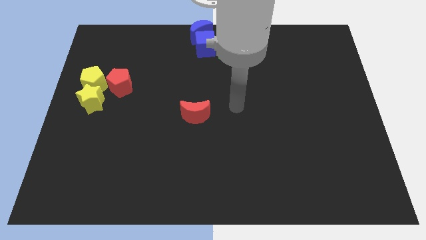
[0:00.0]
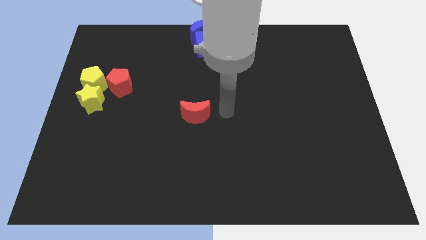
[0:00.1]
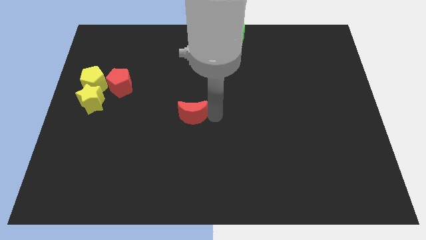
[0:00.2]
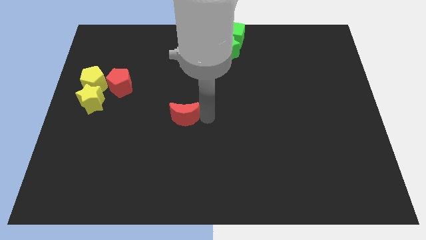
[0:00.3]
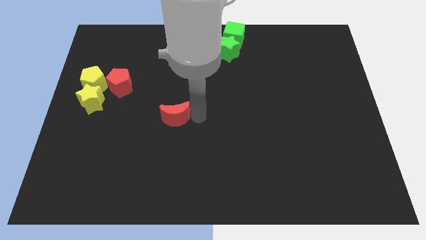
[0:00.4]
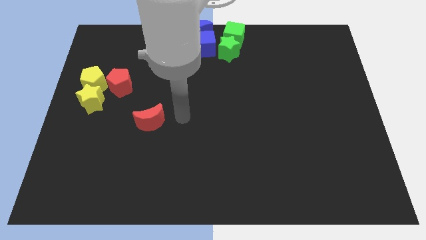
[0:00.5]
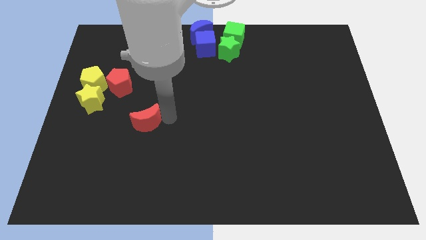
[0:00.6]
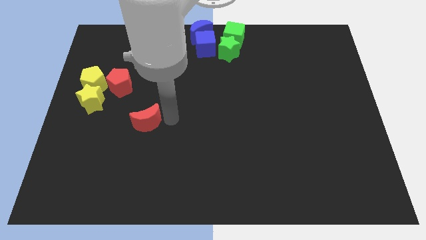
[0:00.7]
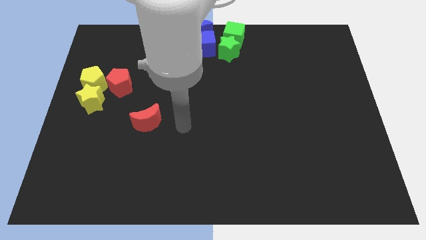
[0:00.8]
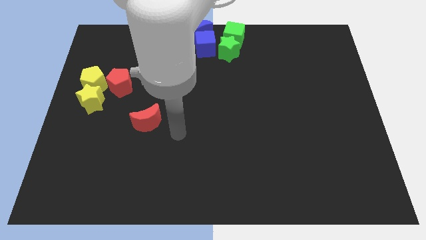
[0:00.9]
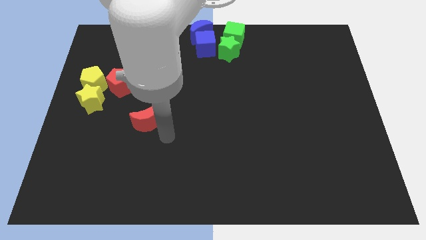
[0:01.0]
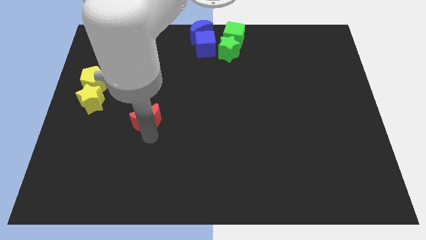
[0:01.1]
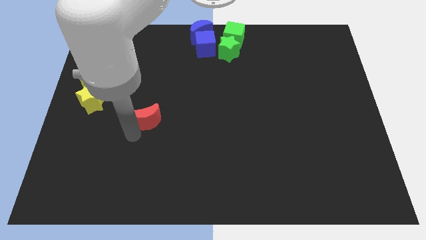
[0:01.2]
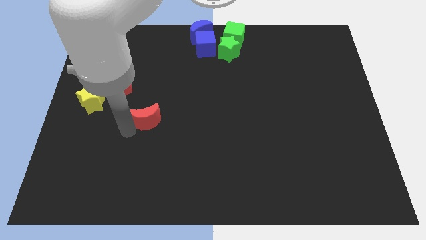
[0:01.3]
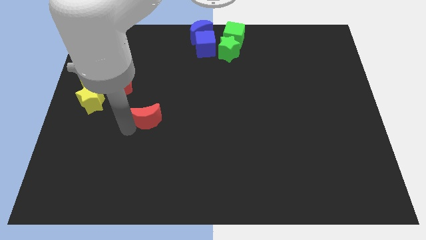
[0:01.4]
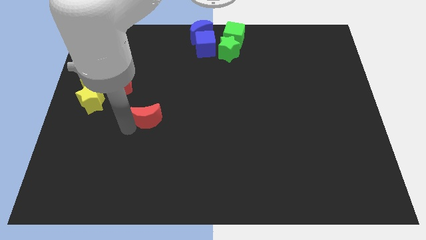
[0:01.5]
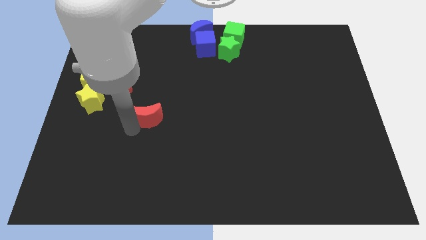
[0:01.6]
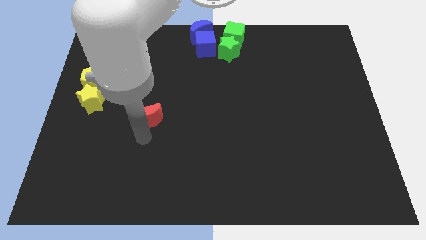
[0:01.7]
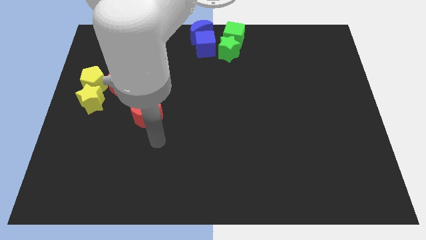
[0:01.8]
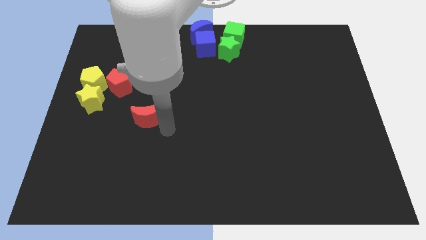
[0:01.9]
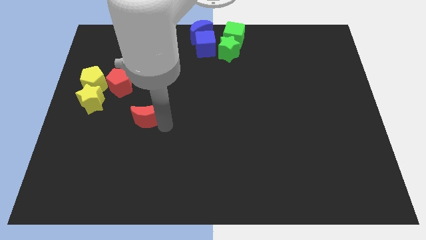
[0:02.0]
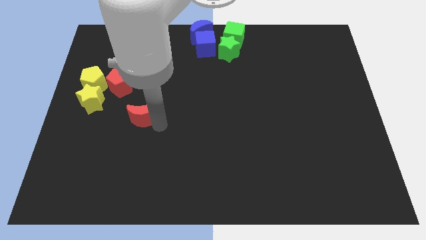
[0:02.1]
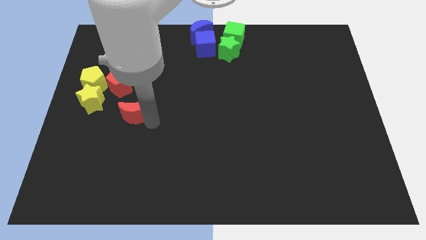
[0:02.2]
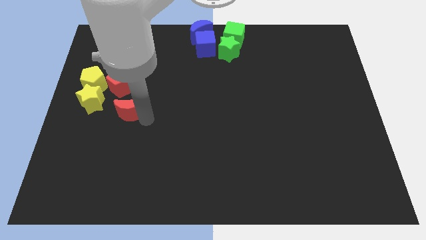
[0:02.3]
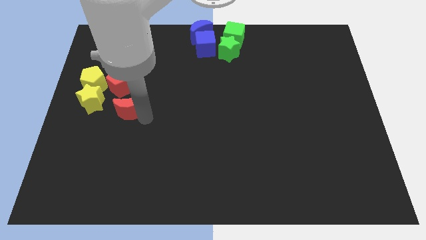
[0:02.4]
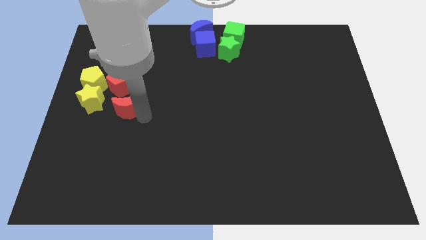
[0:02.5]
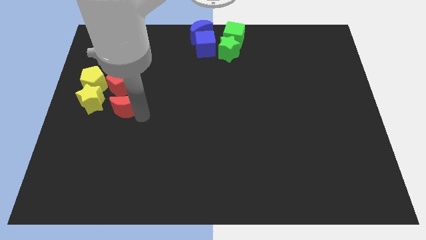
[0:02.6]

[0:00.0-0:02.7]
move the red crescent below the red pentagon

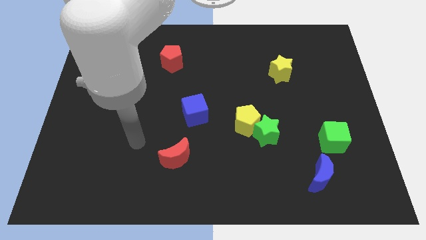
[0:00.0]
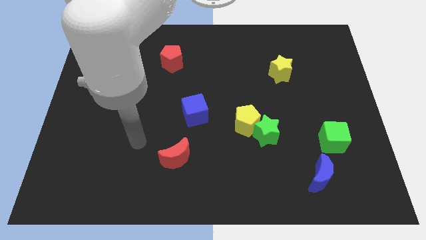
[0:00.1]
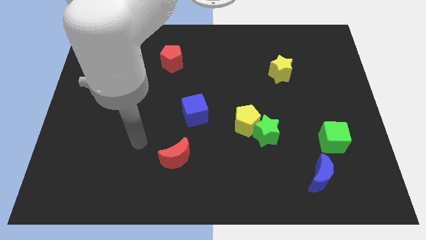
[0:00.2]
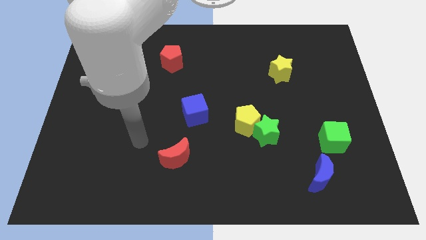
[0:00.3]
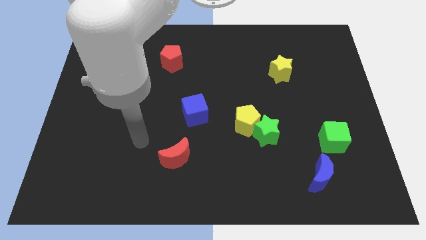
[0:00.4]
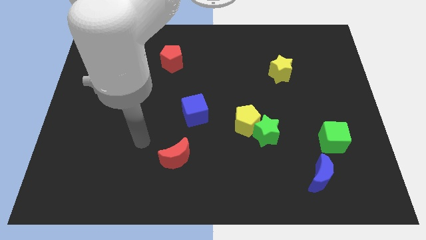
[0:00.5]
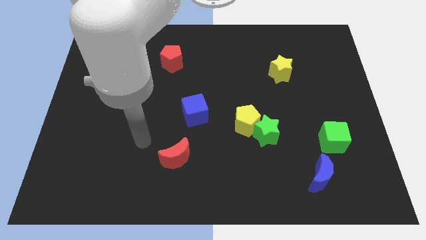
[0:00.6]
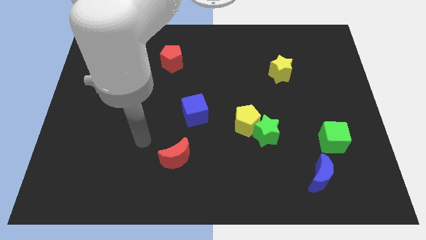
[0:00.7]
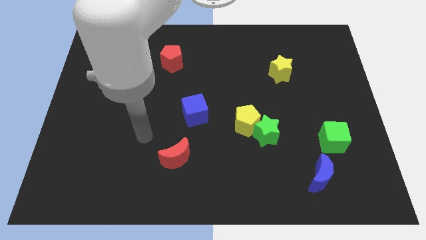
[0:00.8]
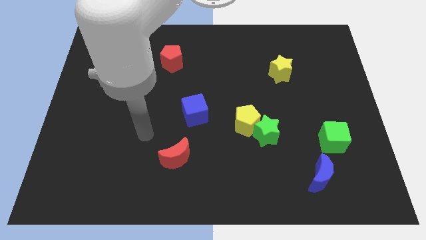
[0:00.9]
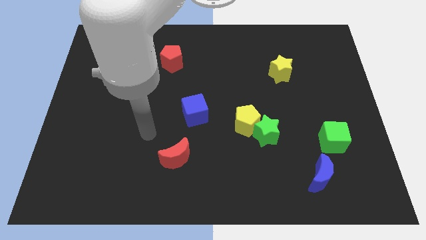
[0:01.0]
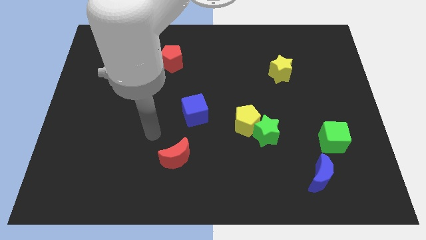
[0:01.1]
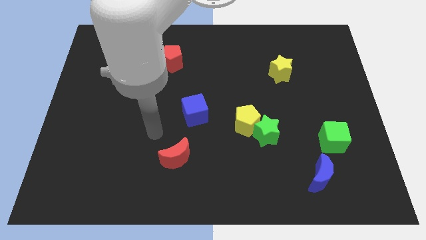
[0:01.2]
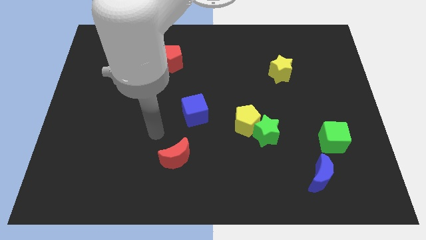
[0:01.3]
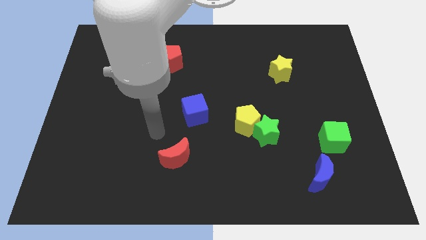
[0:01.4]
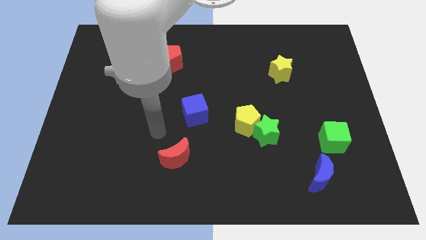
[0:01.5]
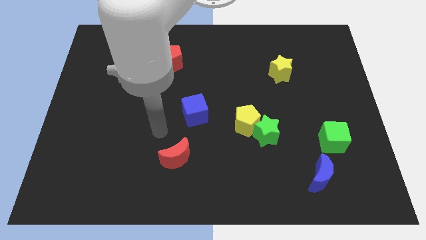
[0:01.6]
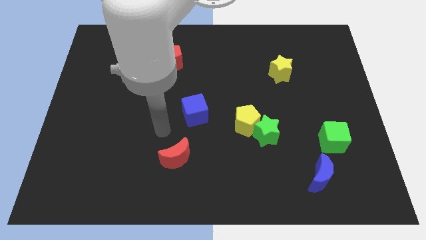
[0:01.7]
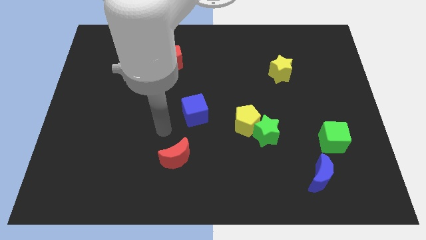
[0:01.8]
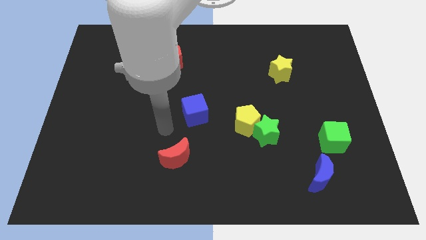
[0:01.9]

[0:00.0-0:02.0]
place your arm to the top of the red moon

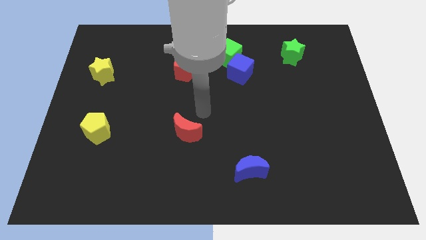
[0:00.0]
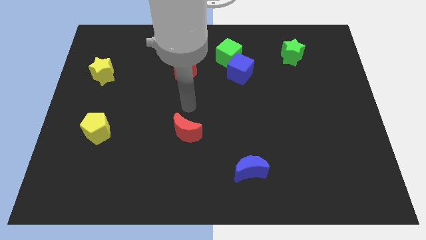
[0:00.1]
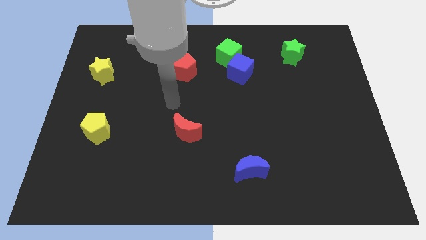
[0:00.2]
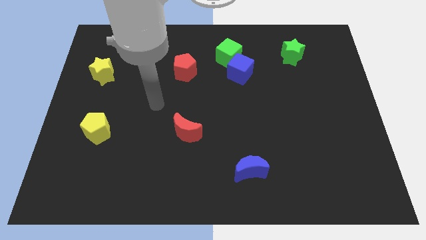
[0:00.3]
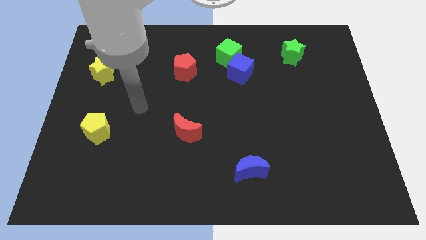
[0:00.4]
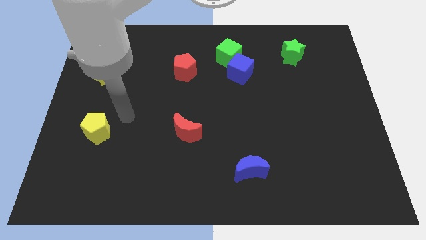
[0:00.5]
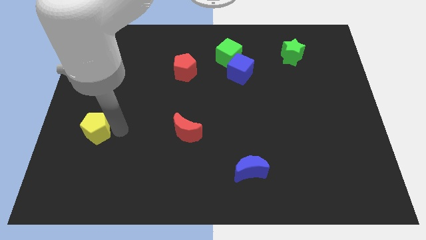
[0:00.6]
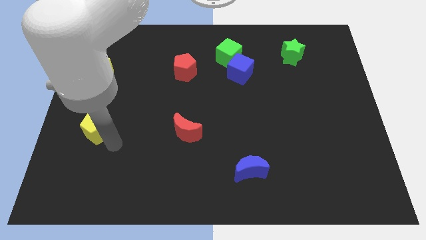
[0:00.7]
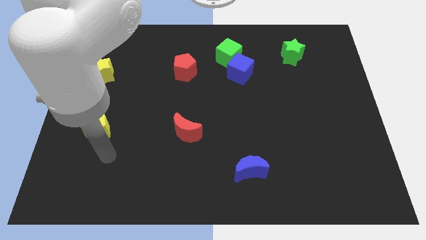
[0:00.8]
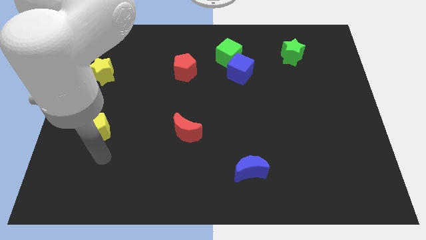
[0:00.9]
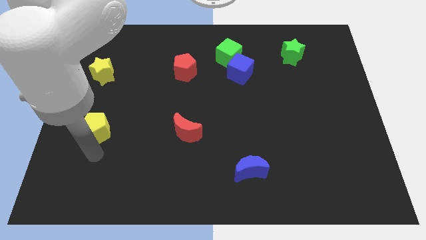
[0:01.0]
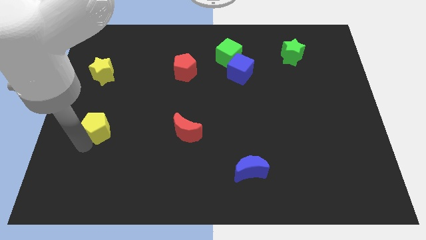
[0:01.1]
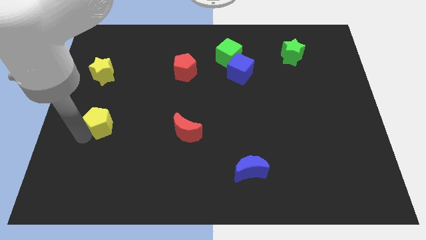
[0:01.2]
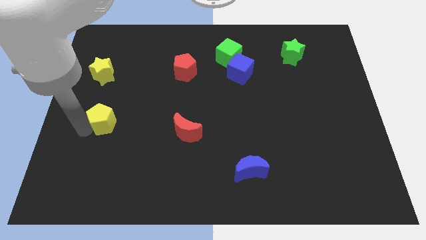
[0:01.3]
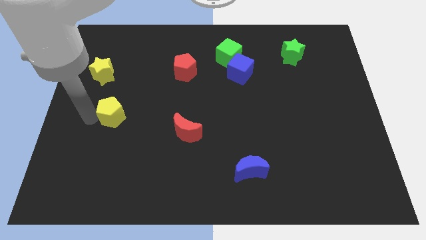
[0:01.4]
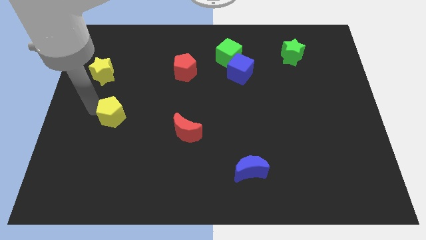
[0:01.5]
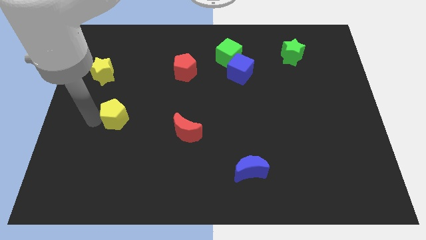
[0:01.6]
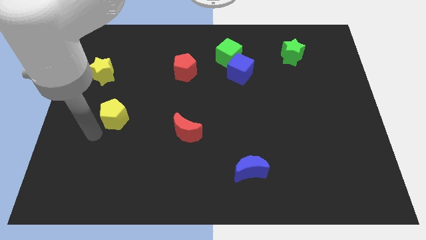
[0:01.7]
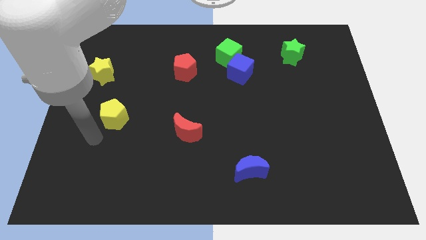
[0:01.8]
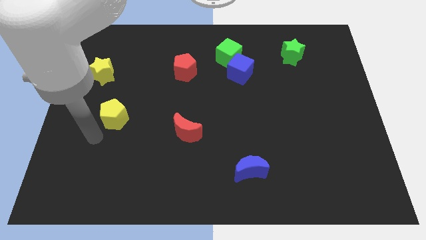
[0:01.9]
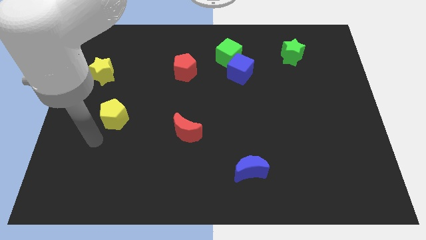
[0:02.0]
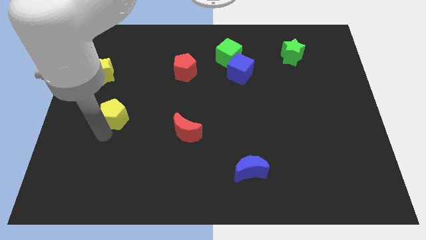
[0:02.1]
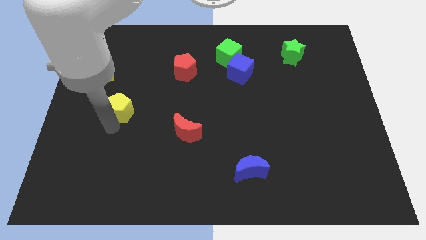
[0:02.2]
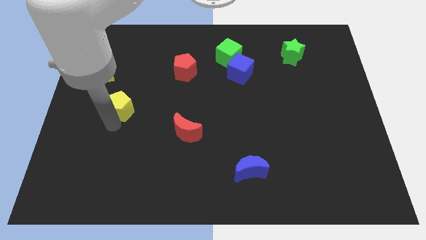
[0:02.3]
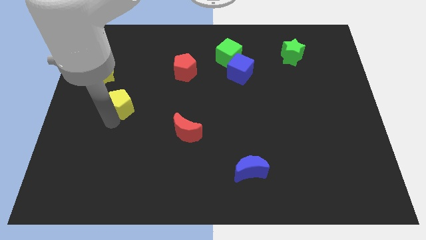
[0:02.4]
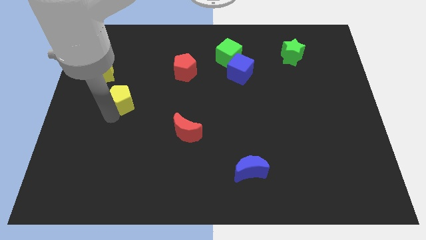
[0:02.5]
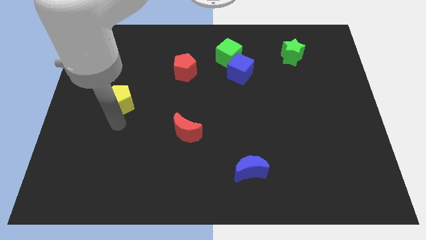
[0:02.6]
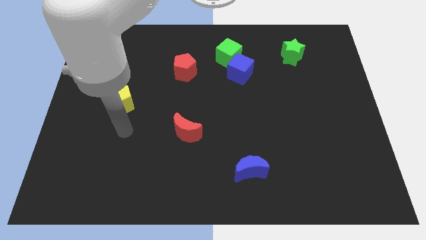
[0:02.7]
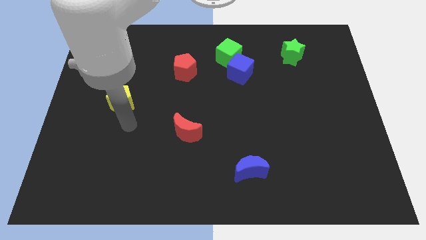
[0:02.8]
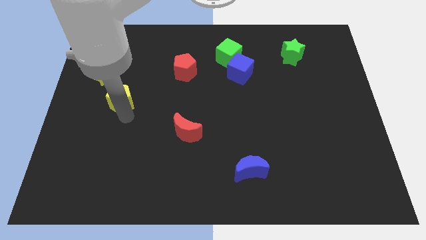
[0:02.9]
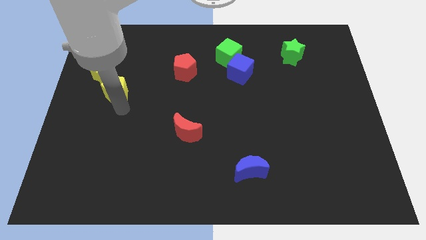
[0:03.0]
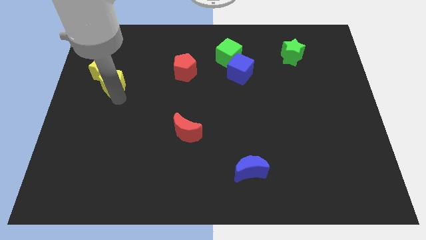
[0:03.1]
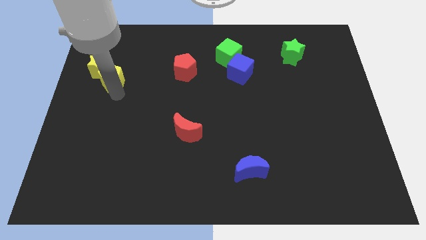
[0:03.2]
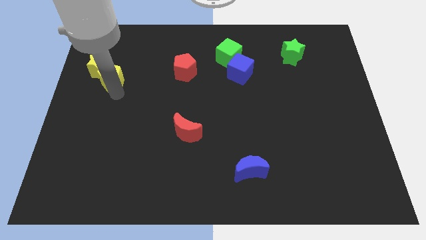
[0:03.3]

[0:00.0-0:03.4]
push the yellow pentagon into the bottom side of the yellow star

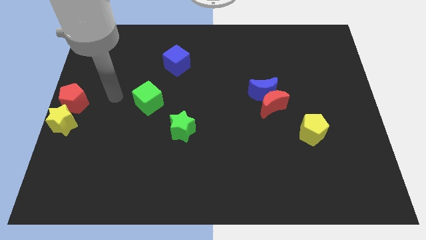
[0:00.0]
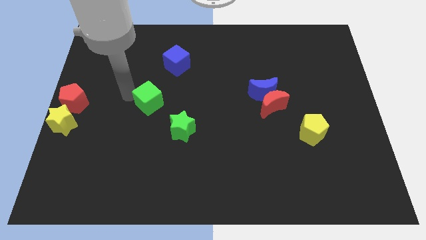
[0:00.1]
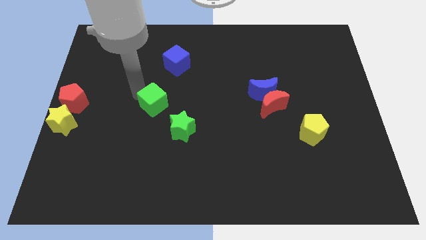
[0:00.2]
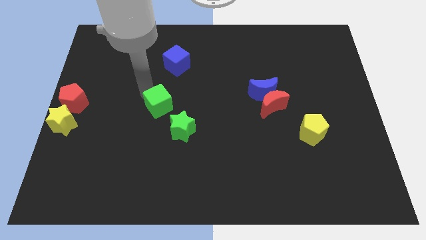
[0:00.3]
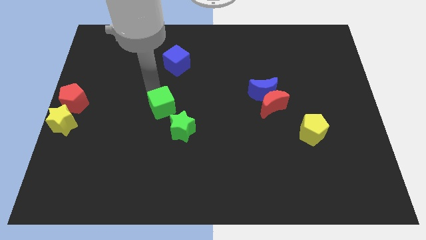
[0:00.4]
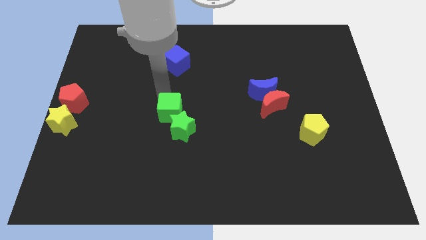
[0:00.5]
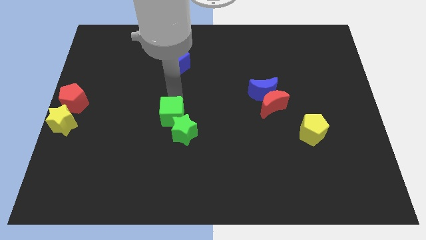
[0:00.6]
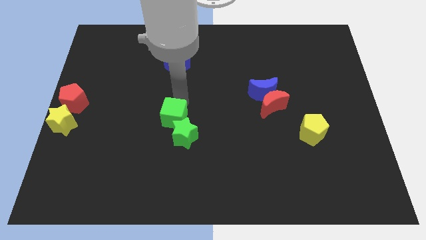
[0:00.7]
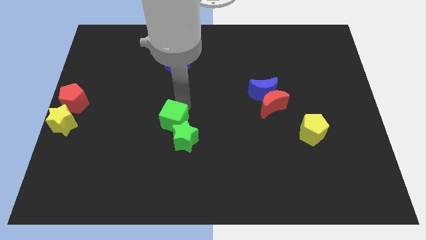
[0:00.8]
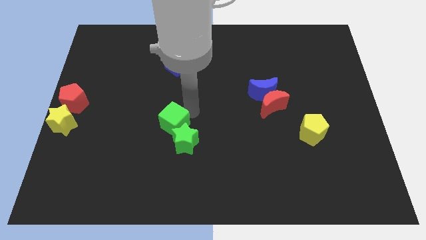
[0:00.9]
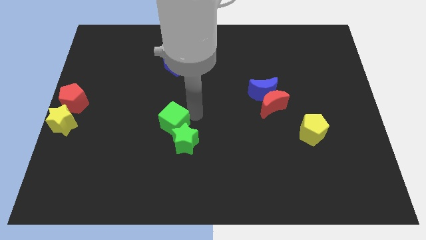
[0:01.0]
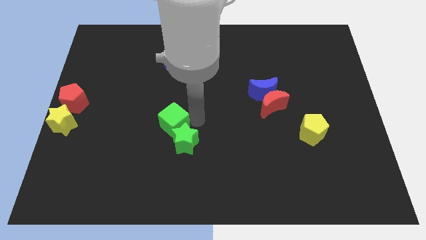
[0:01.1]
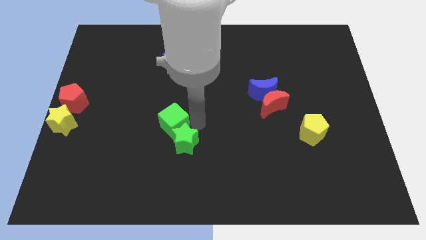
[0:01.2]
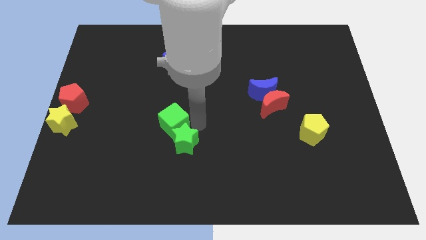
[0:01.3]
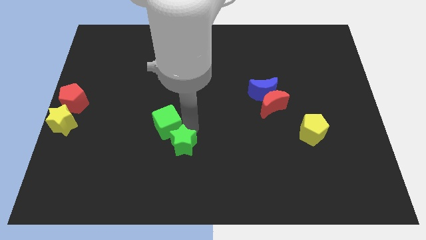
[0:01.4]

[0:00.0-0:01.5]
push the green cube into the green star
